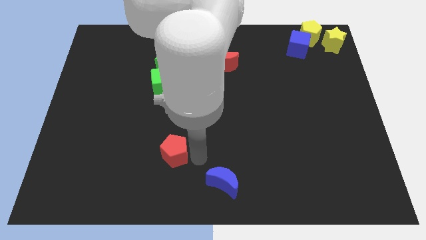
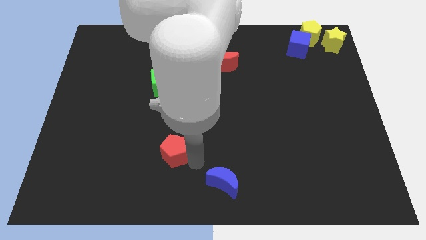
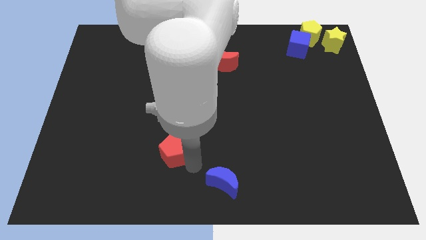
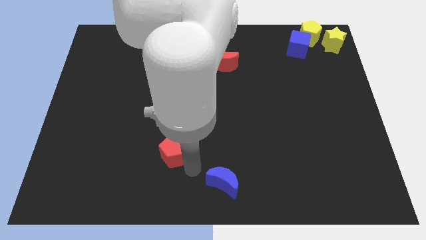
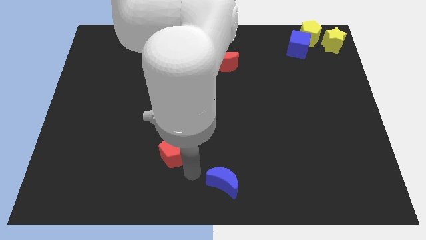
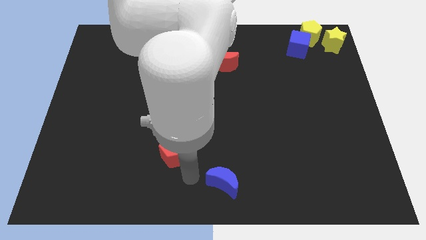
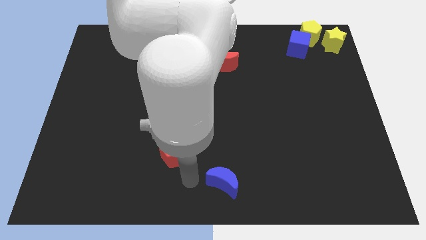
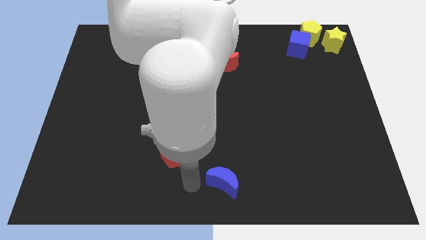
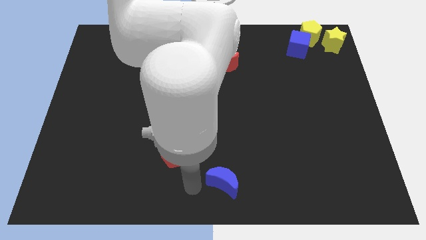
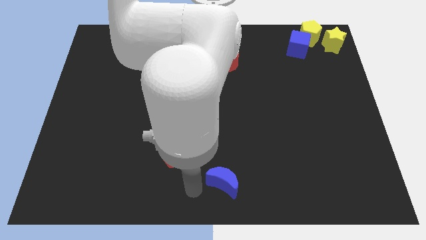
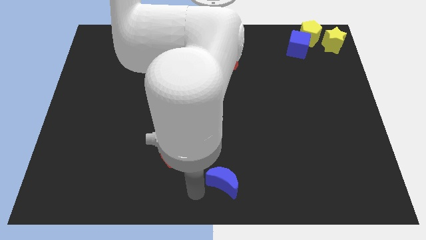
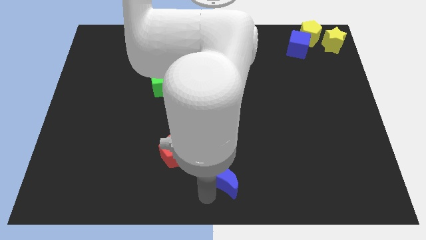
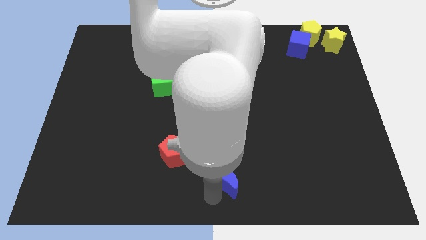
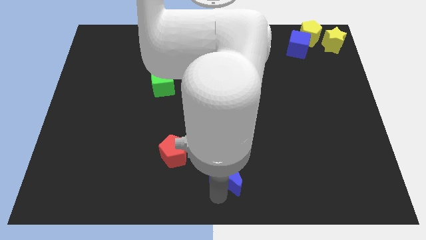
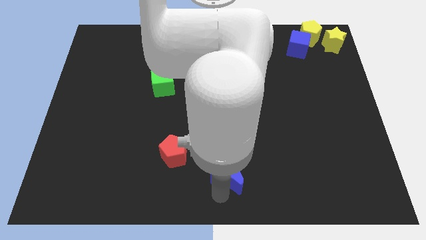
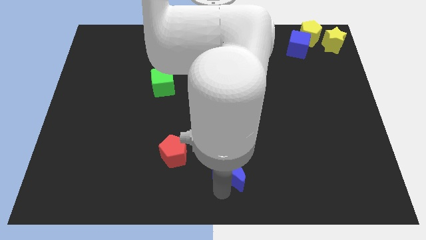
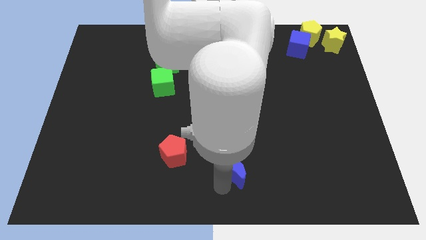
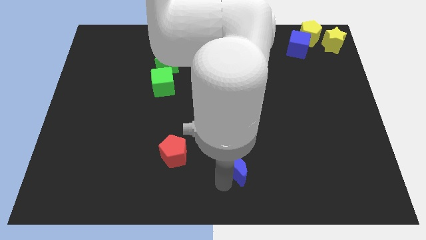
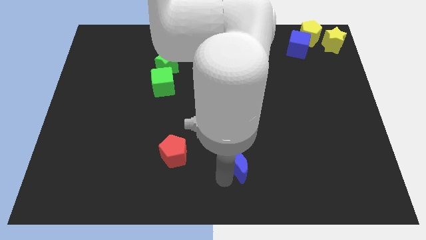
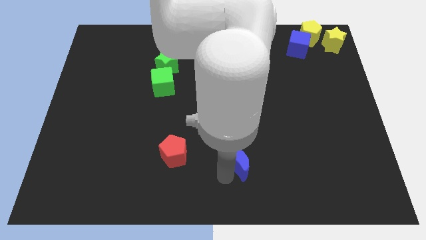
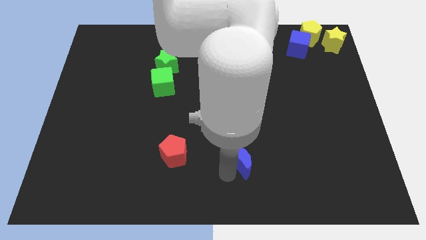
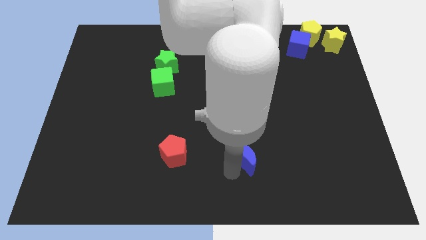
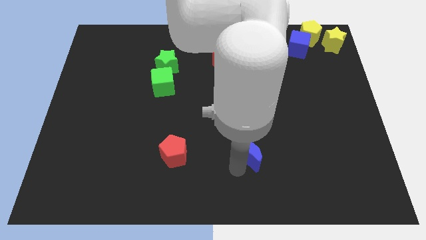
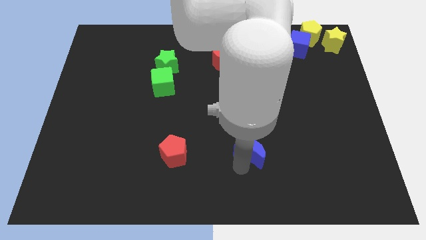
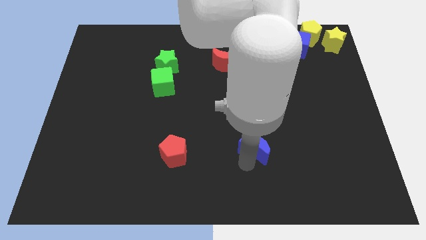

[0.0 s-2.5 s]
move the blue moon parallel to the red pentagon on the right

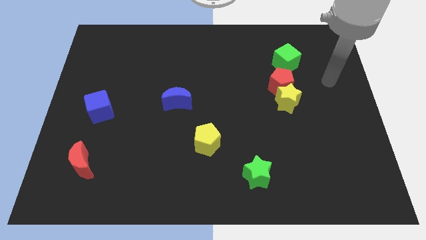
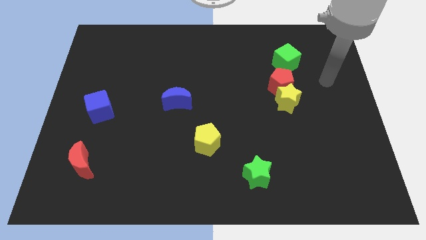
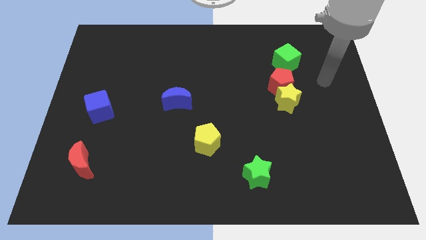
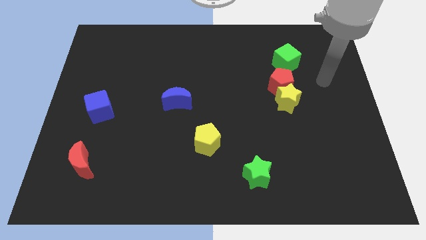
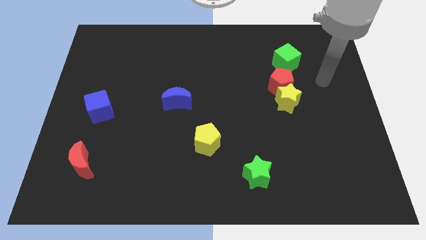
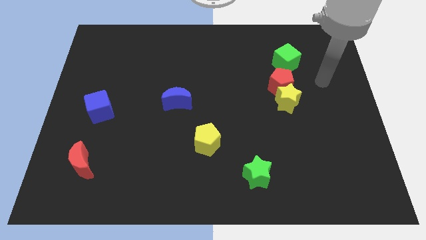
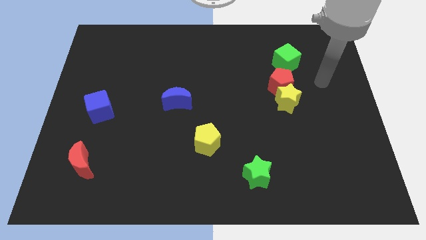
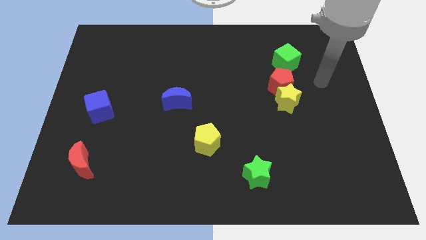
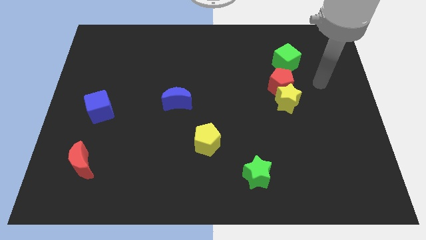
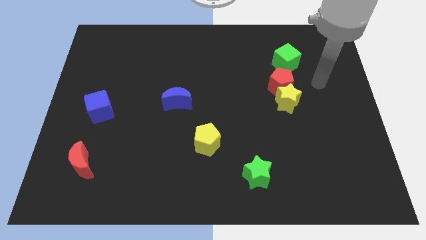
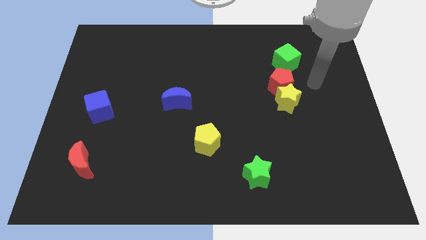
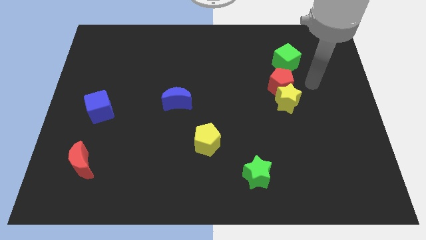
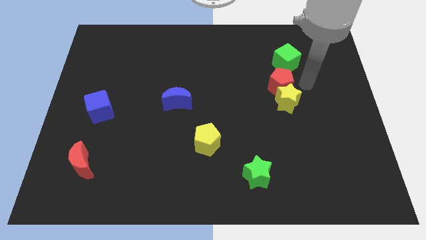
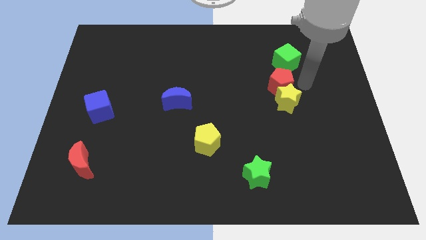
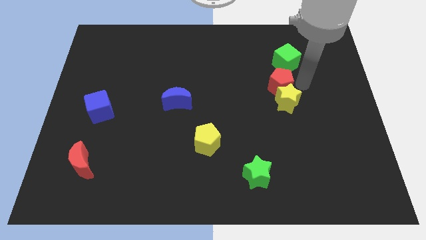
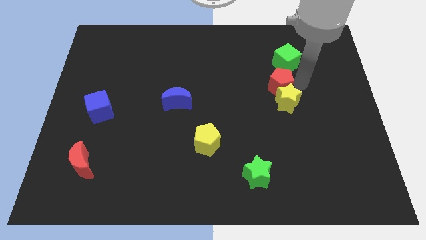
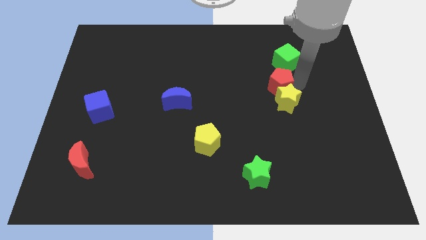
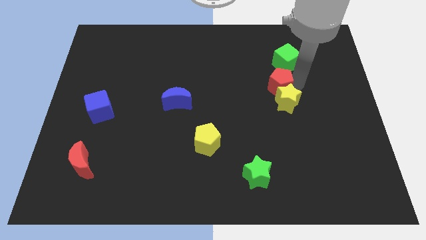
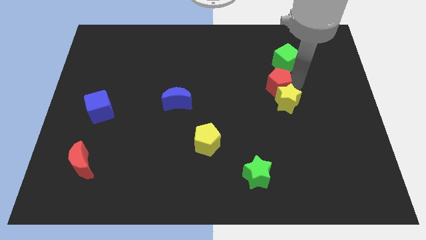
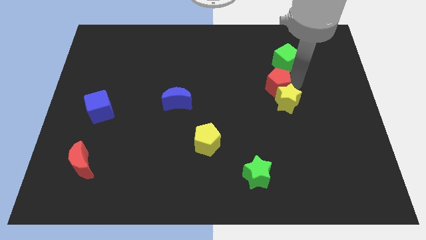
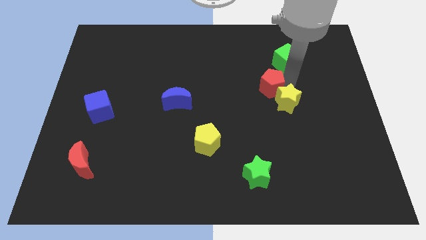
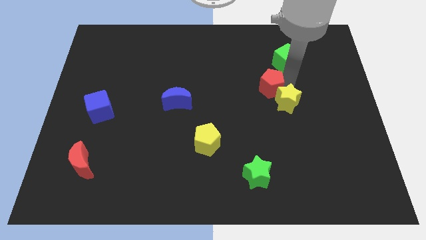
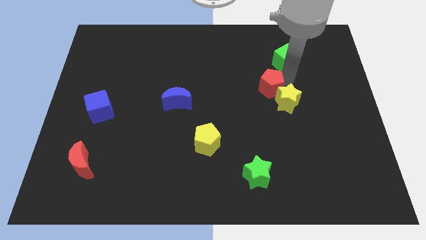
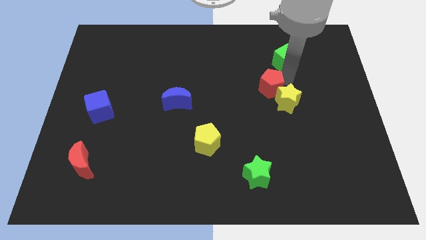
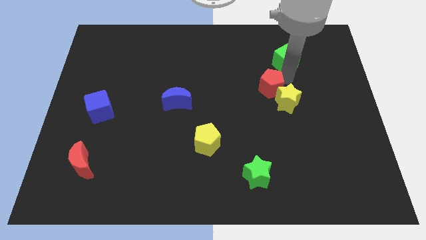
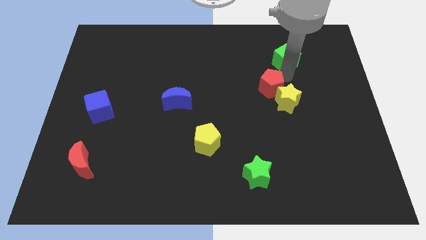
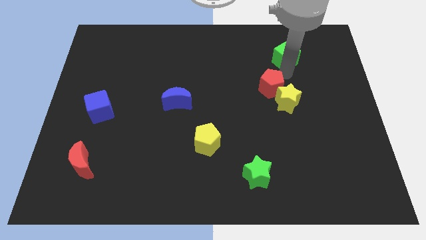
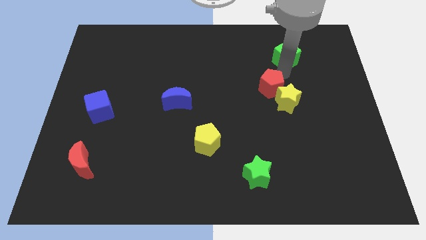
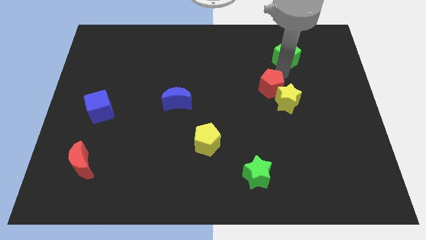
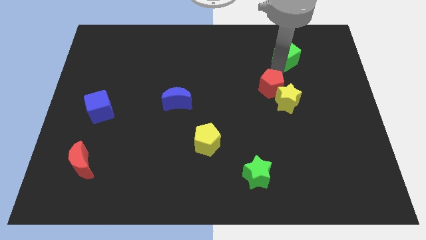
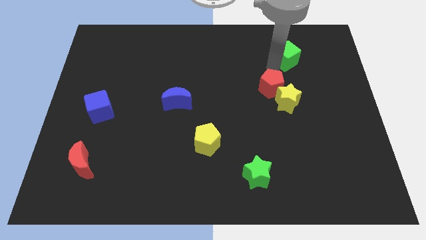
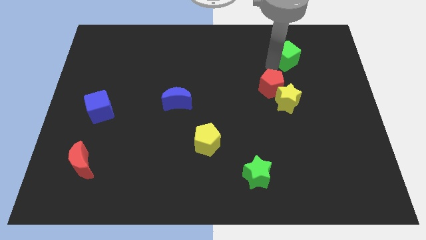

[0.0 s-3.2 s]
move the arm towards the top of the red pentagon

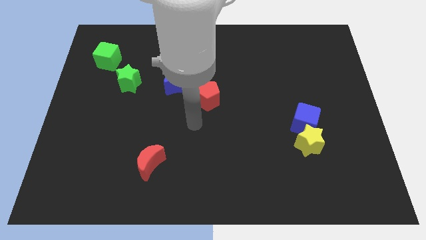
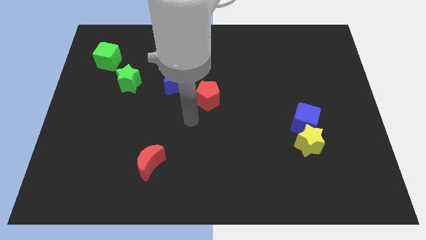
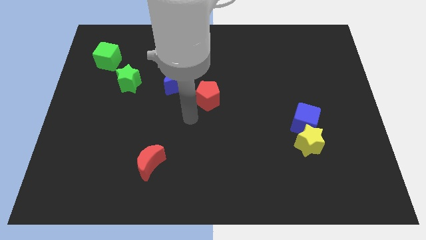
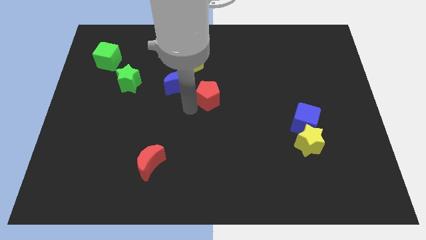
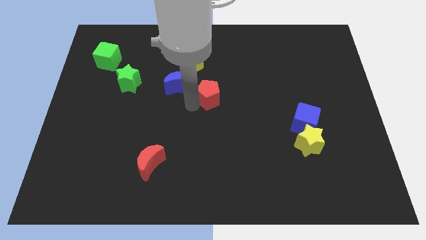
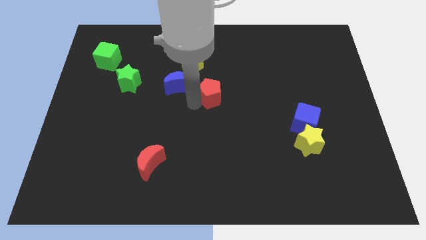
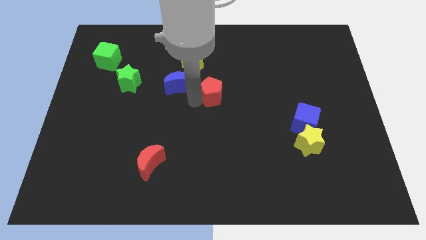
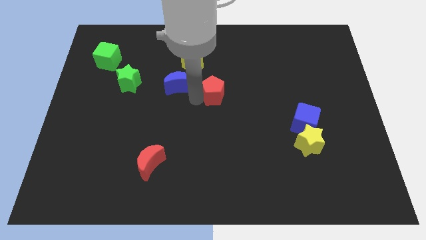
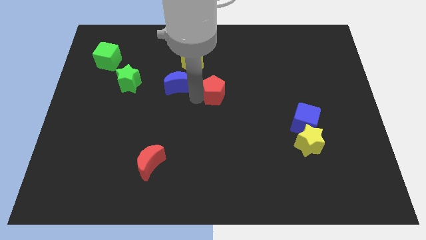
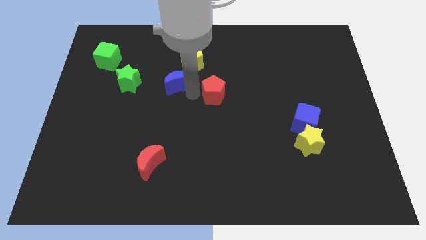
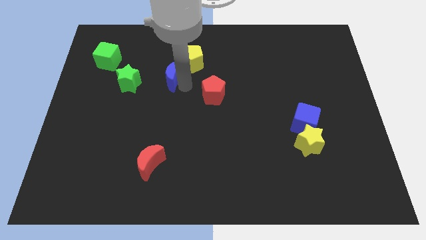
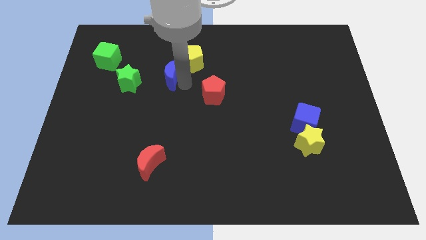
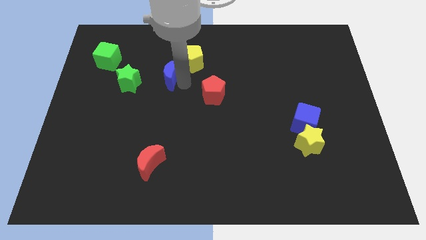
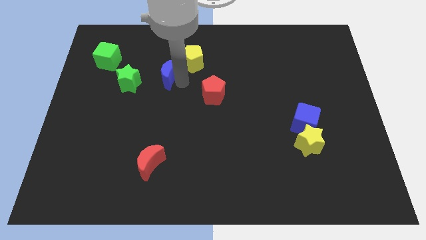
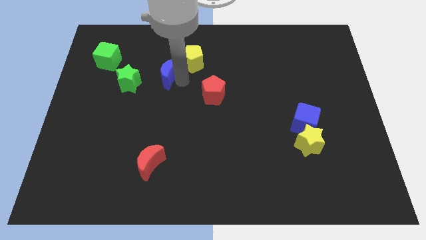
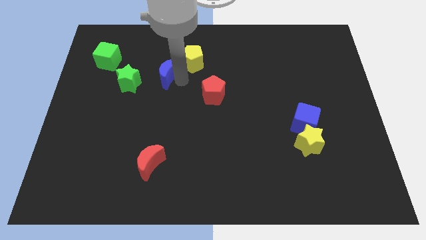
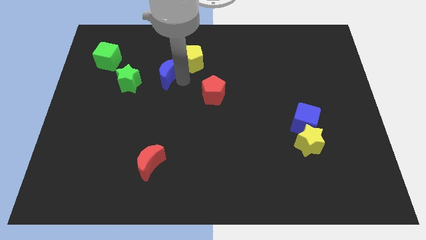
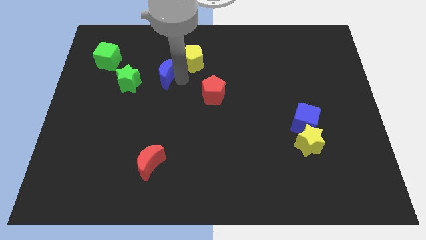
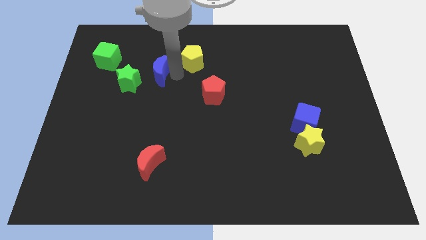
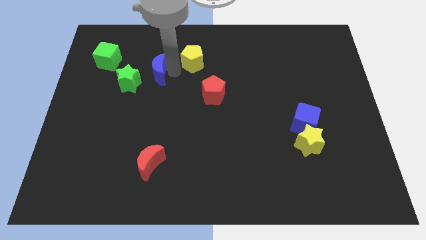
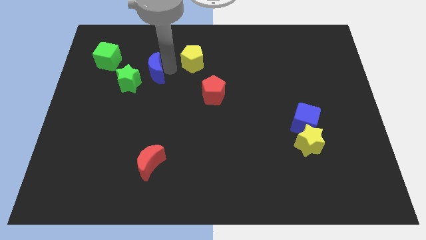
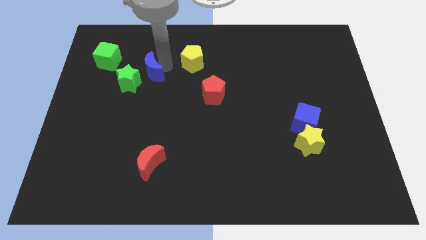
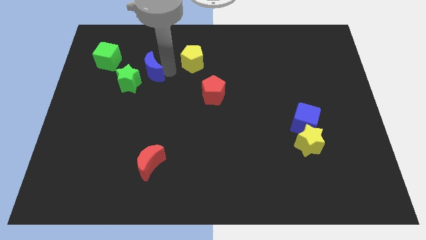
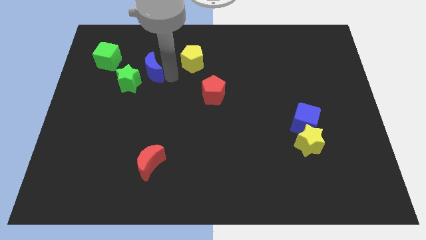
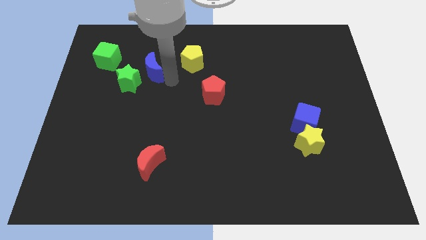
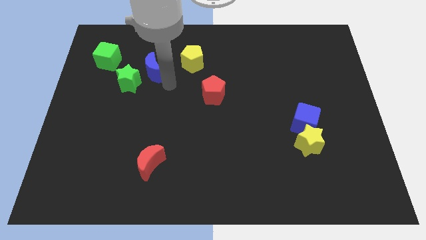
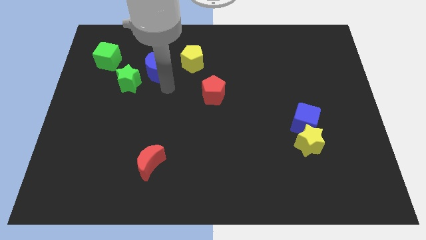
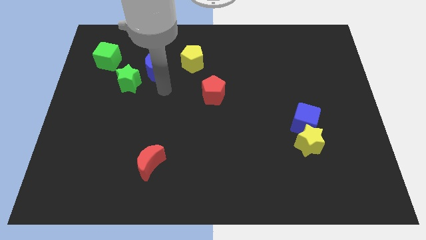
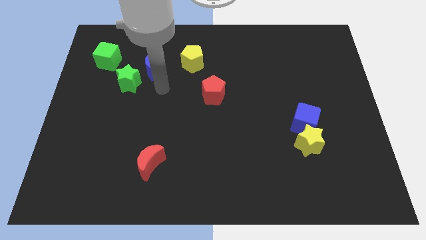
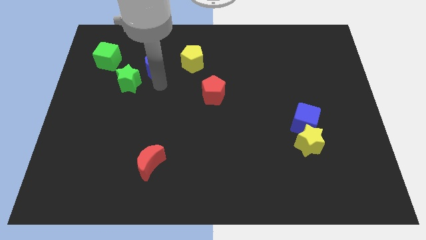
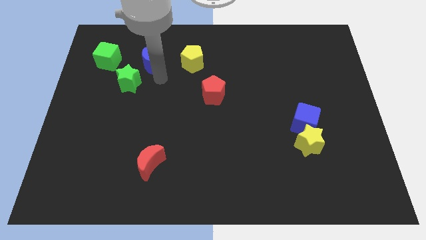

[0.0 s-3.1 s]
place the blue moon in between the yellow pentagon and green star

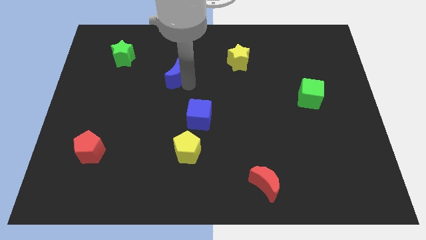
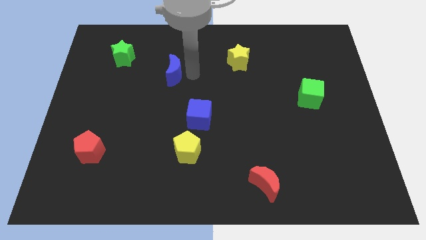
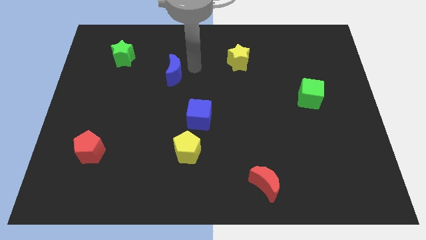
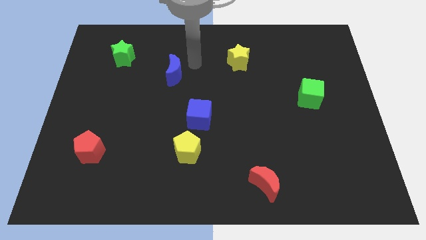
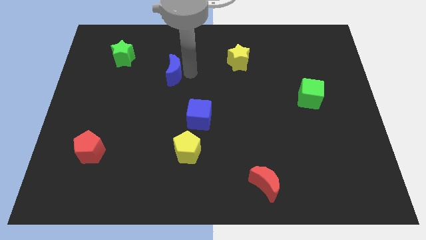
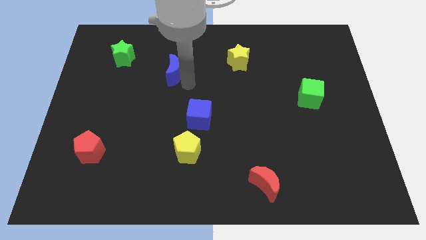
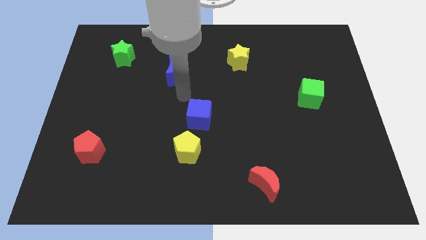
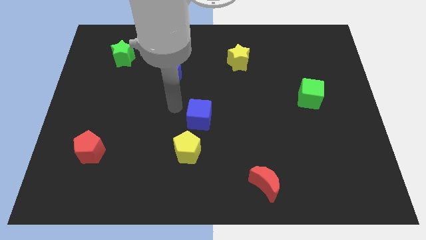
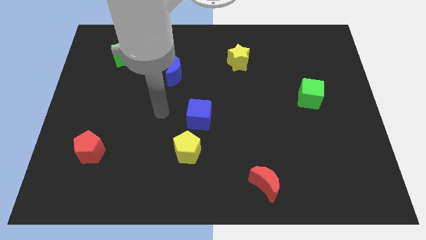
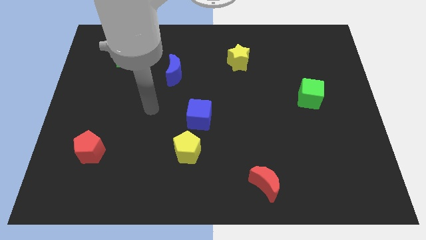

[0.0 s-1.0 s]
move the arm away from the blue crescent
